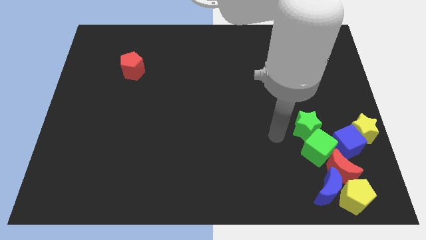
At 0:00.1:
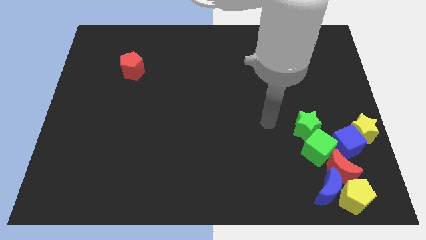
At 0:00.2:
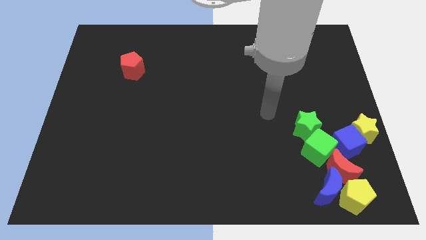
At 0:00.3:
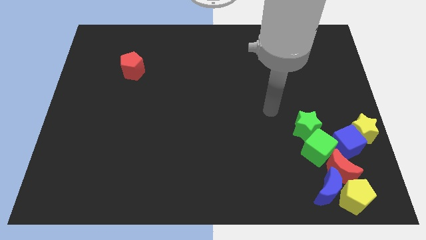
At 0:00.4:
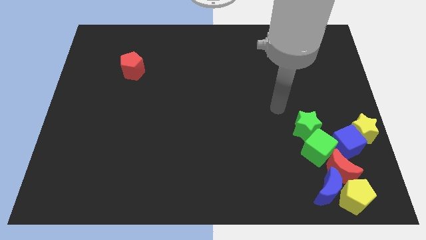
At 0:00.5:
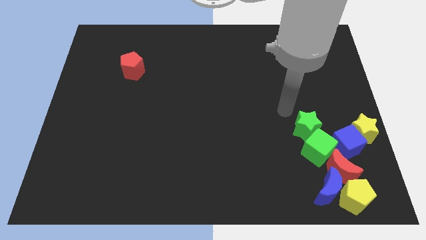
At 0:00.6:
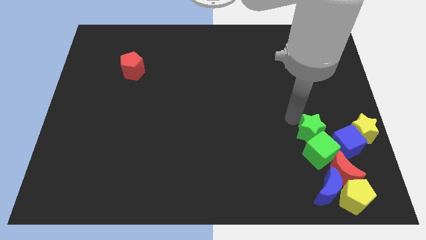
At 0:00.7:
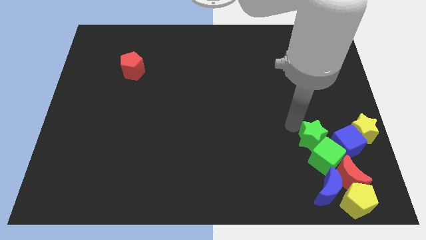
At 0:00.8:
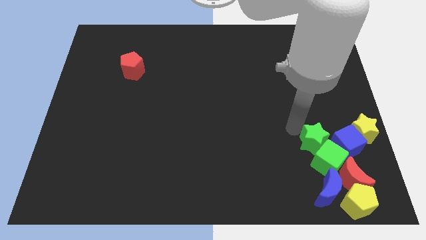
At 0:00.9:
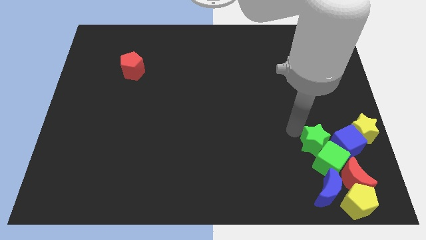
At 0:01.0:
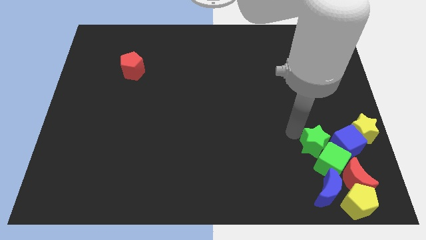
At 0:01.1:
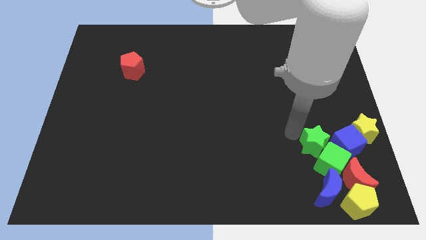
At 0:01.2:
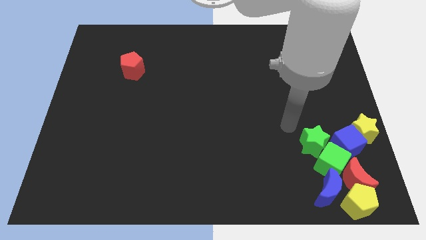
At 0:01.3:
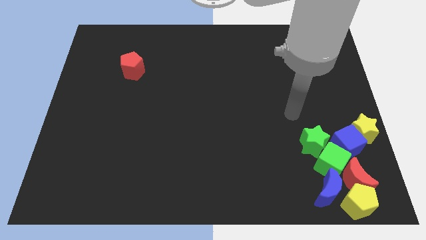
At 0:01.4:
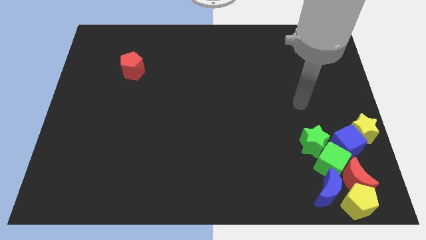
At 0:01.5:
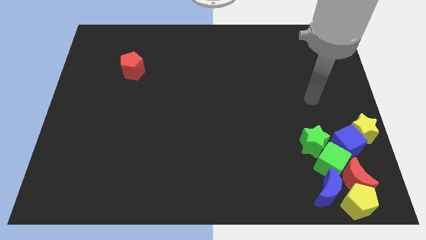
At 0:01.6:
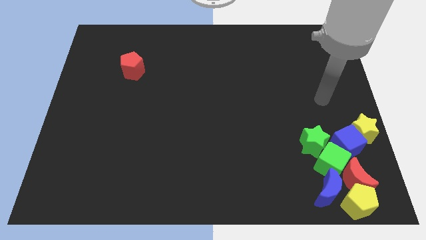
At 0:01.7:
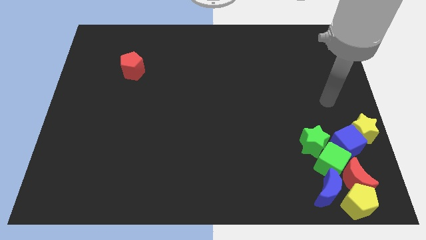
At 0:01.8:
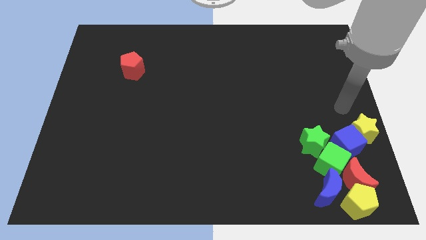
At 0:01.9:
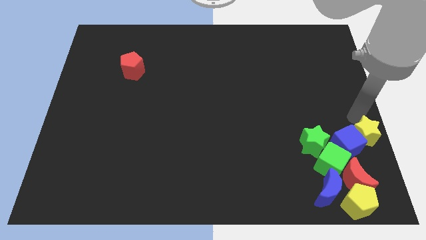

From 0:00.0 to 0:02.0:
move the red moon with green cube

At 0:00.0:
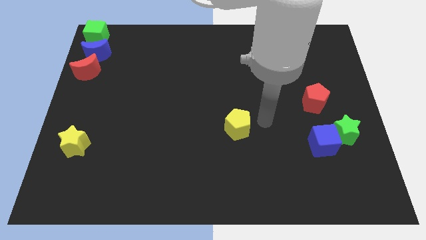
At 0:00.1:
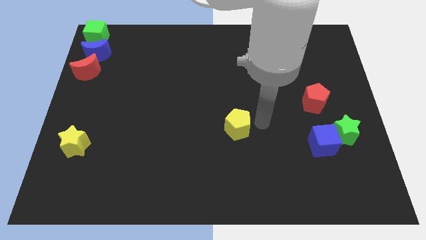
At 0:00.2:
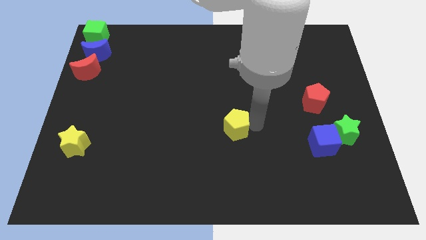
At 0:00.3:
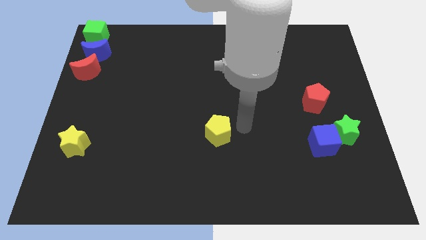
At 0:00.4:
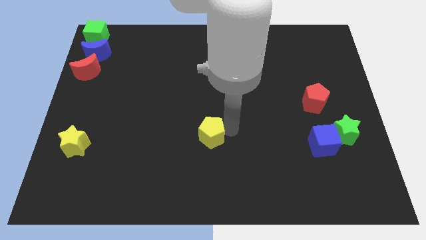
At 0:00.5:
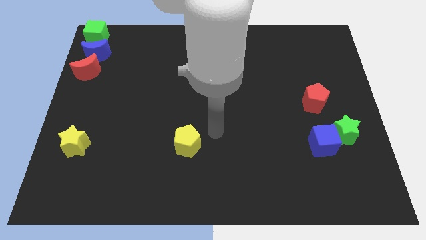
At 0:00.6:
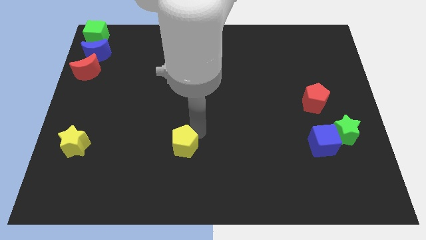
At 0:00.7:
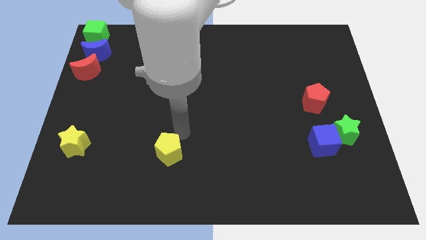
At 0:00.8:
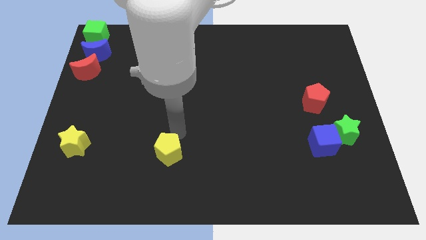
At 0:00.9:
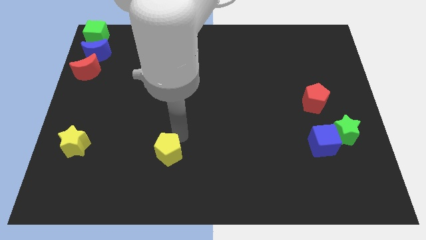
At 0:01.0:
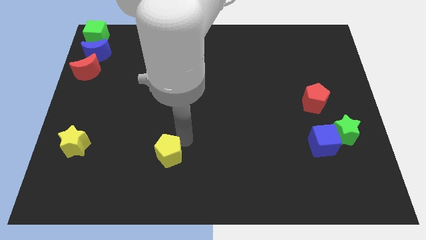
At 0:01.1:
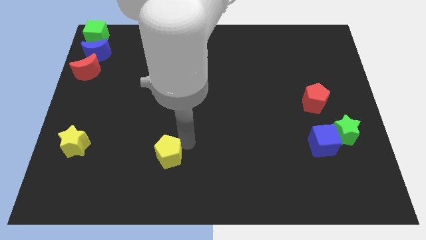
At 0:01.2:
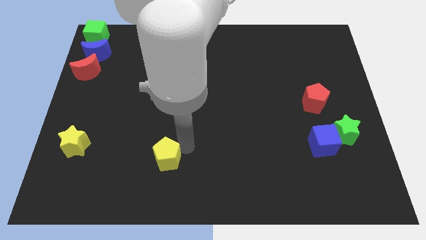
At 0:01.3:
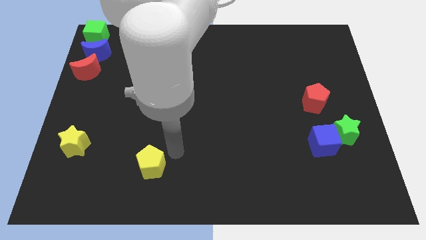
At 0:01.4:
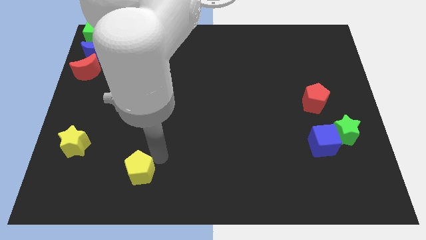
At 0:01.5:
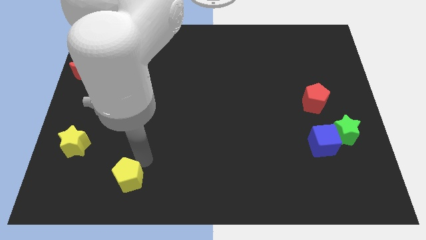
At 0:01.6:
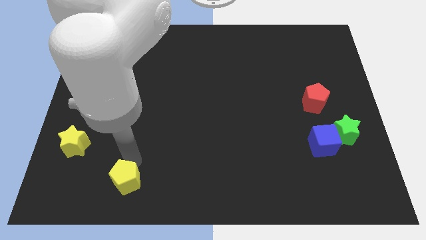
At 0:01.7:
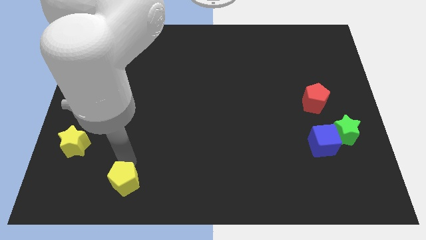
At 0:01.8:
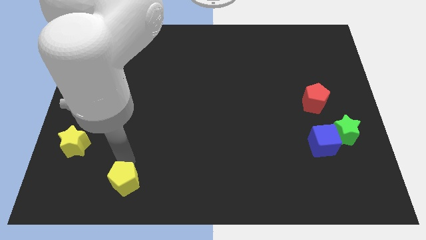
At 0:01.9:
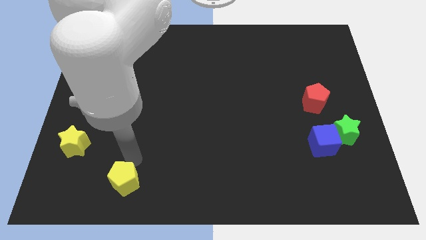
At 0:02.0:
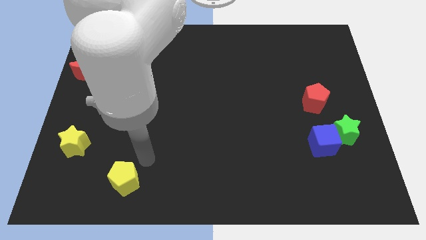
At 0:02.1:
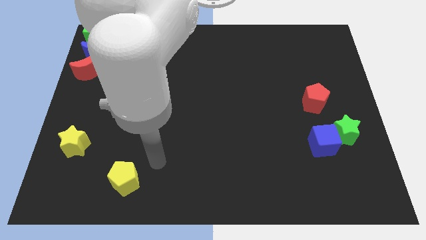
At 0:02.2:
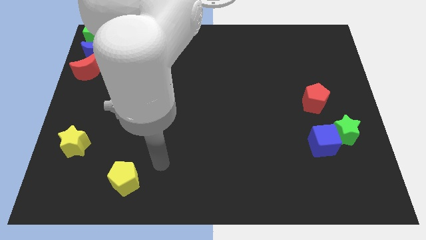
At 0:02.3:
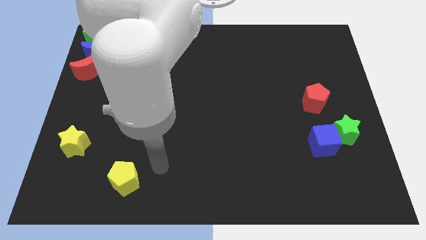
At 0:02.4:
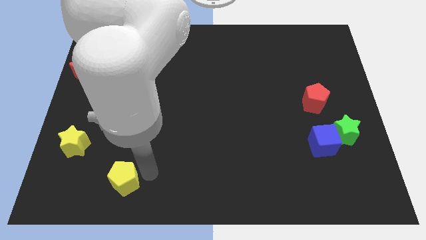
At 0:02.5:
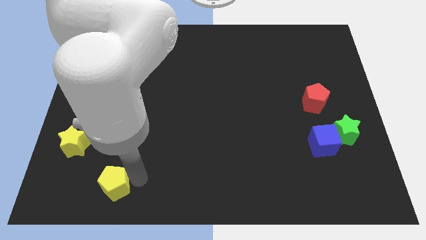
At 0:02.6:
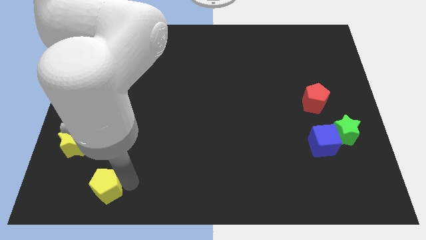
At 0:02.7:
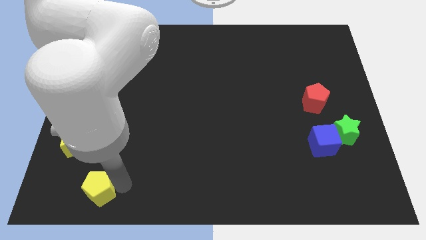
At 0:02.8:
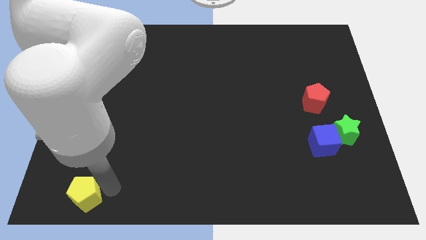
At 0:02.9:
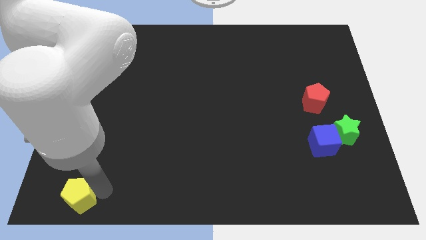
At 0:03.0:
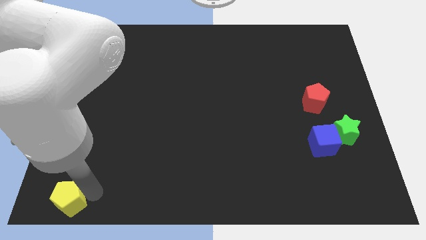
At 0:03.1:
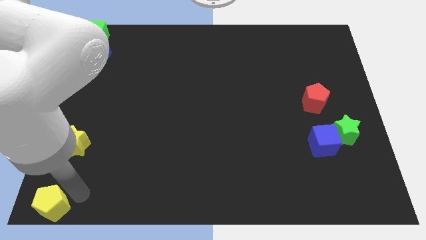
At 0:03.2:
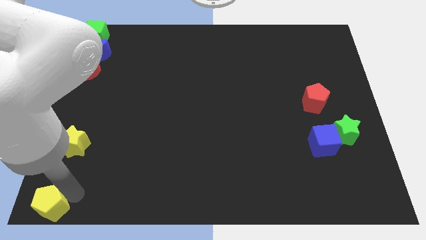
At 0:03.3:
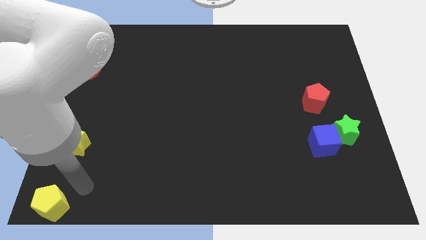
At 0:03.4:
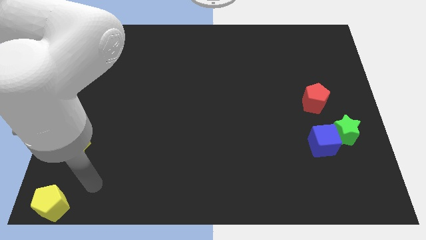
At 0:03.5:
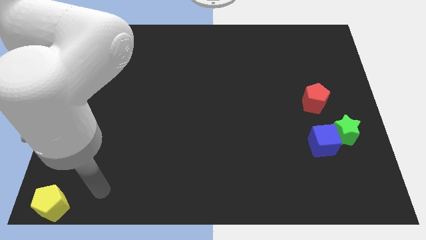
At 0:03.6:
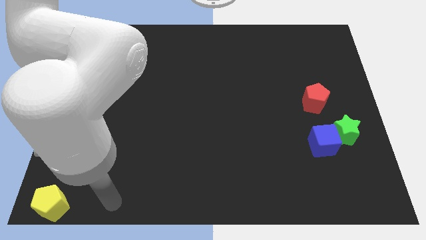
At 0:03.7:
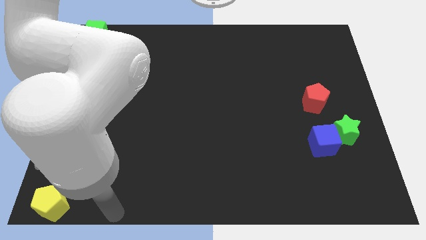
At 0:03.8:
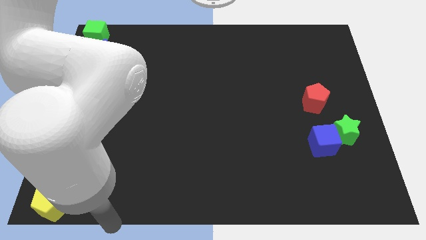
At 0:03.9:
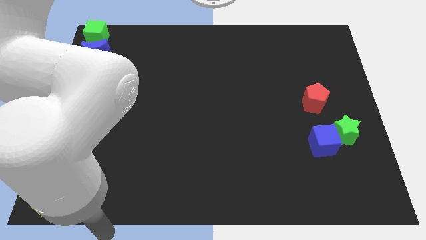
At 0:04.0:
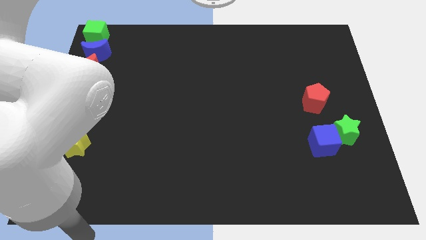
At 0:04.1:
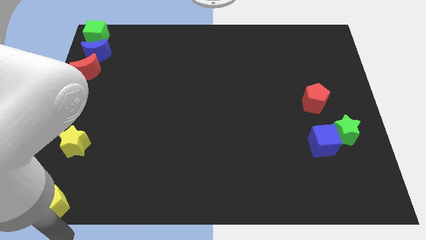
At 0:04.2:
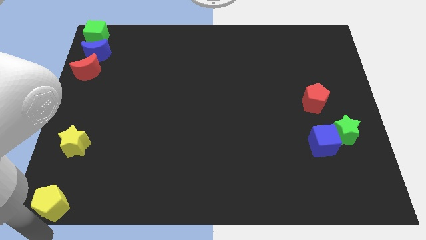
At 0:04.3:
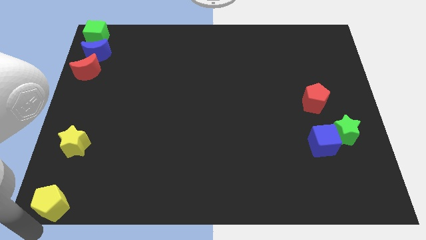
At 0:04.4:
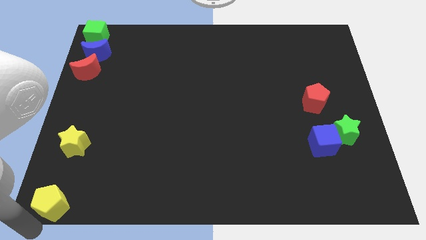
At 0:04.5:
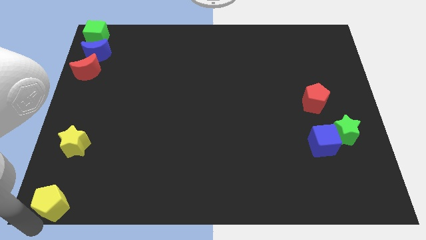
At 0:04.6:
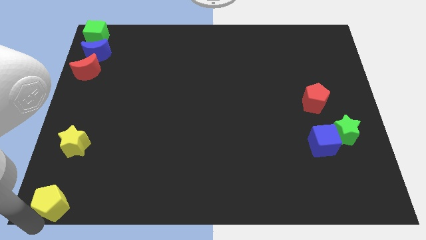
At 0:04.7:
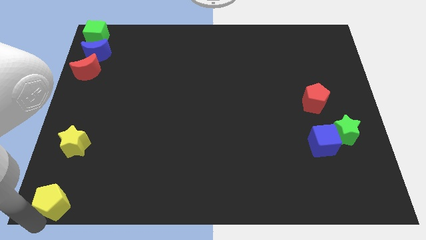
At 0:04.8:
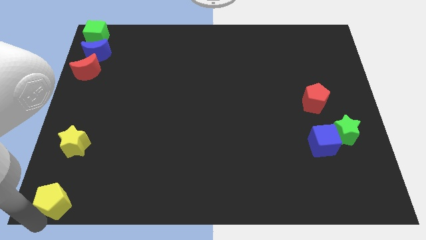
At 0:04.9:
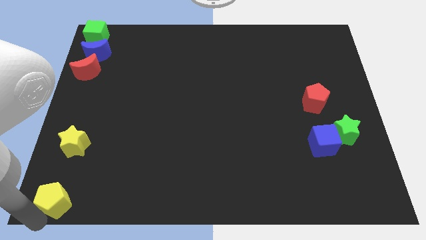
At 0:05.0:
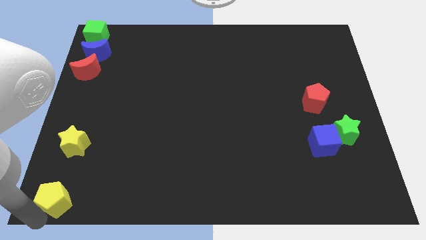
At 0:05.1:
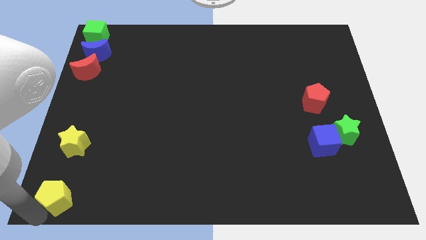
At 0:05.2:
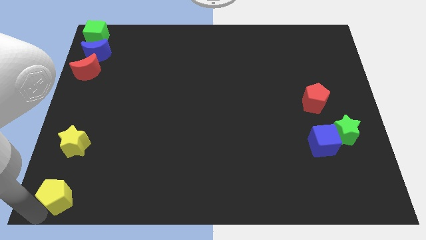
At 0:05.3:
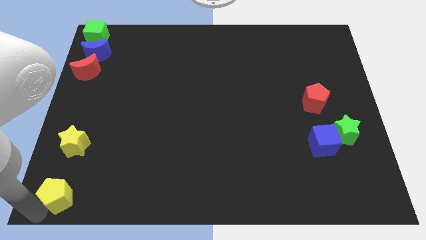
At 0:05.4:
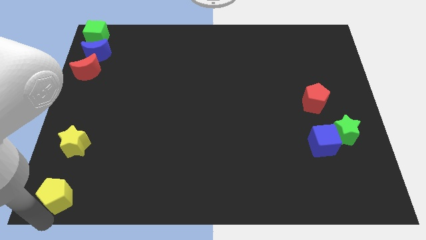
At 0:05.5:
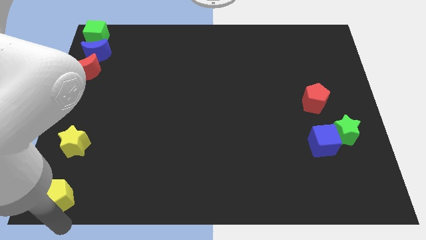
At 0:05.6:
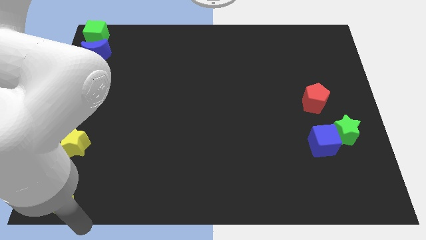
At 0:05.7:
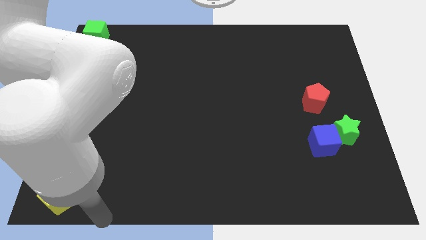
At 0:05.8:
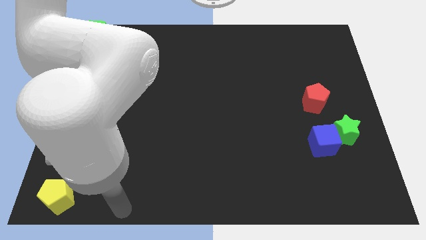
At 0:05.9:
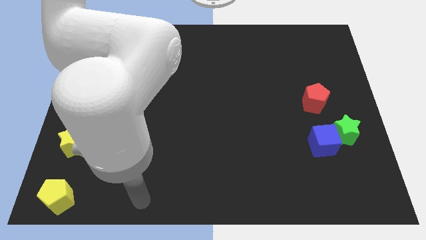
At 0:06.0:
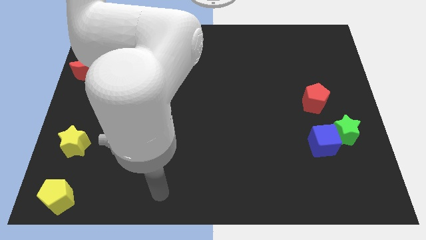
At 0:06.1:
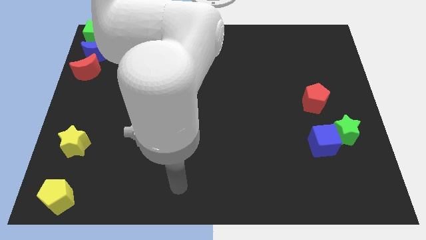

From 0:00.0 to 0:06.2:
place the yellow pentagon below the yellow star

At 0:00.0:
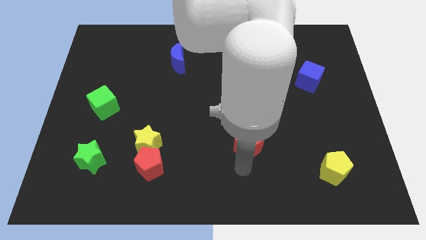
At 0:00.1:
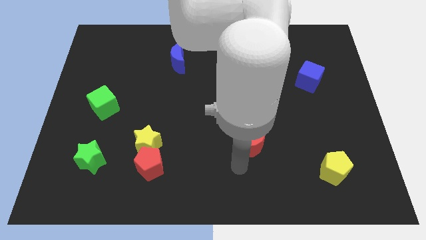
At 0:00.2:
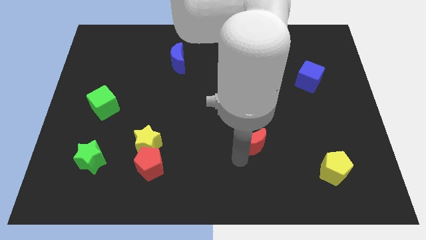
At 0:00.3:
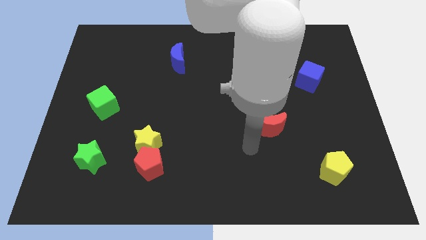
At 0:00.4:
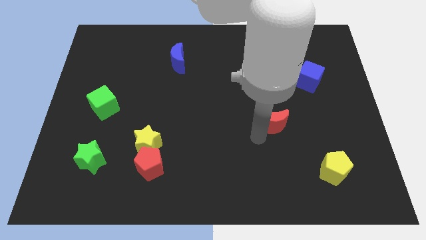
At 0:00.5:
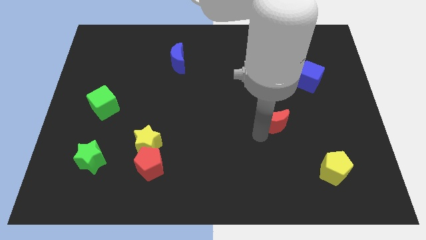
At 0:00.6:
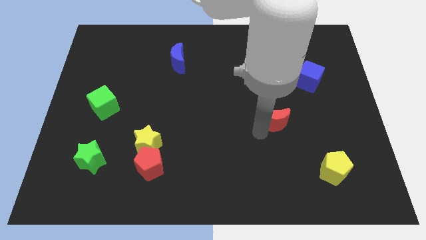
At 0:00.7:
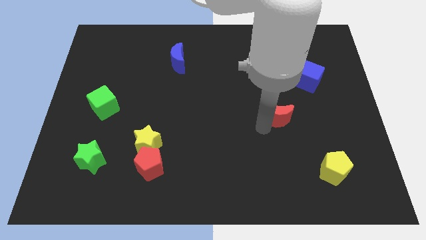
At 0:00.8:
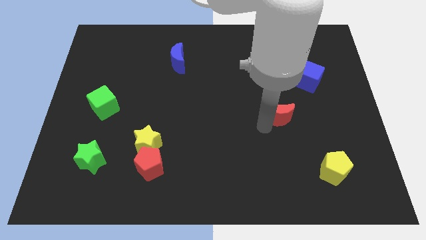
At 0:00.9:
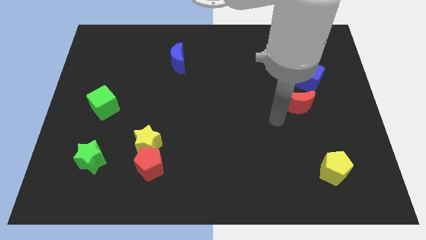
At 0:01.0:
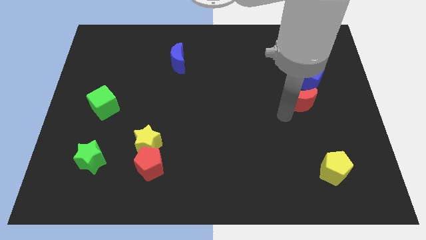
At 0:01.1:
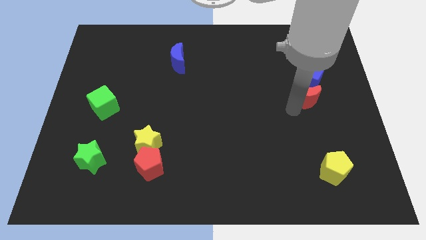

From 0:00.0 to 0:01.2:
move red moon towards blue cube
